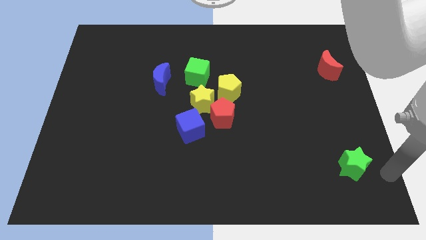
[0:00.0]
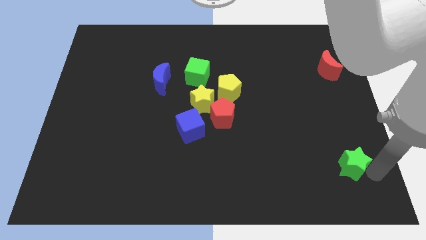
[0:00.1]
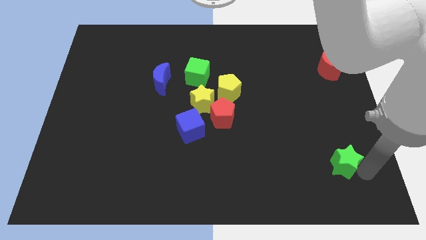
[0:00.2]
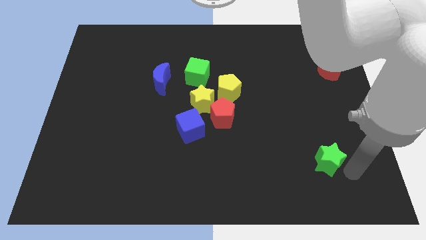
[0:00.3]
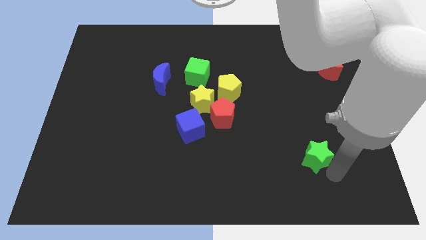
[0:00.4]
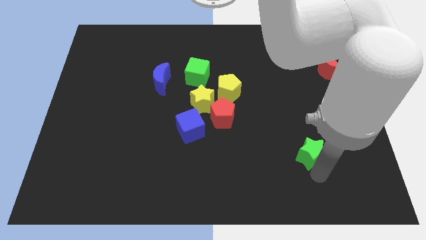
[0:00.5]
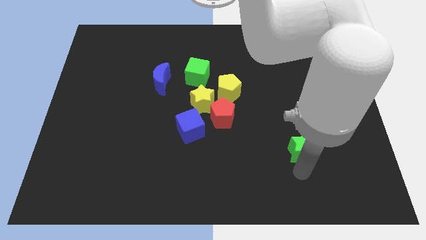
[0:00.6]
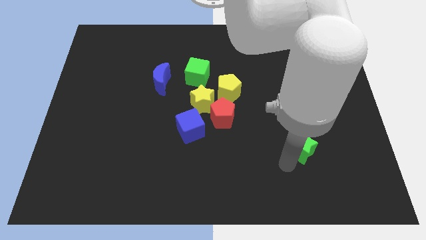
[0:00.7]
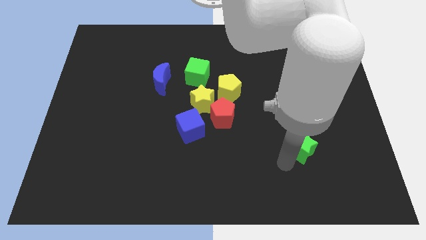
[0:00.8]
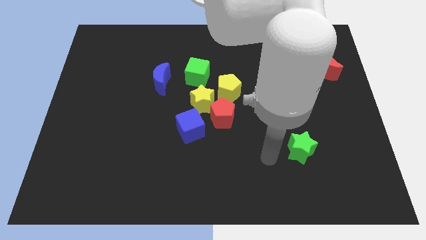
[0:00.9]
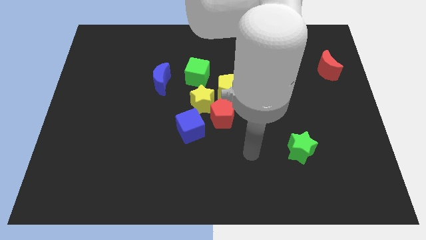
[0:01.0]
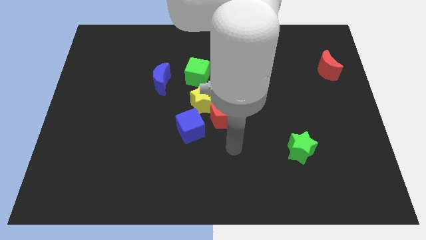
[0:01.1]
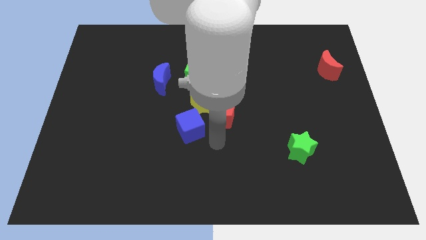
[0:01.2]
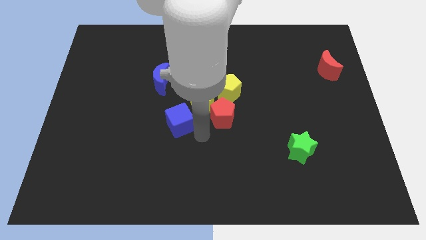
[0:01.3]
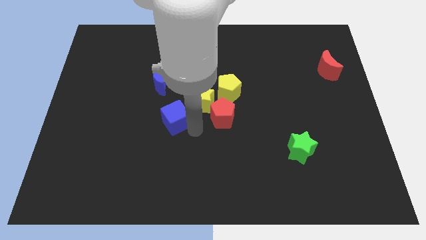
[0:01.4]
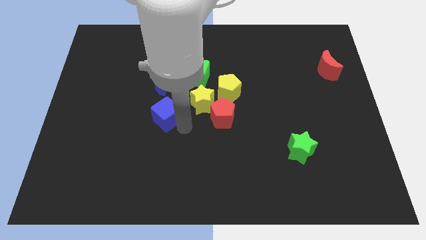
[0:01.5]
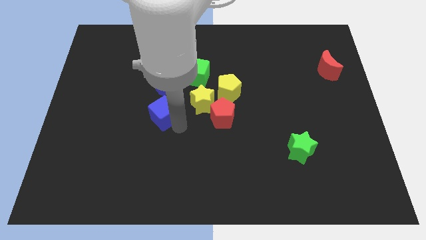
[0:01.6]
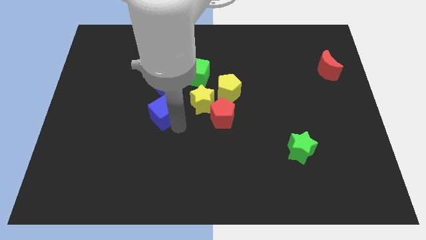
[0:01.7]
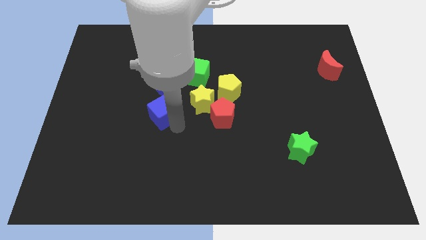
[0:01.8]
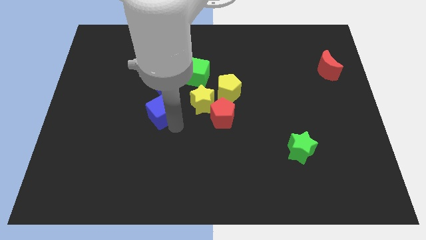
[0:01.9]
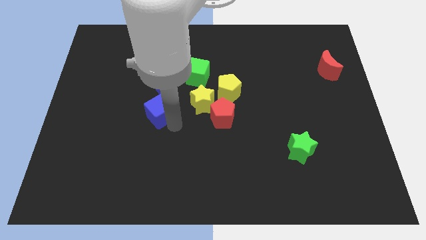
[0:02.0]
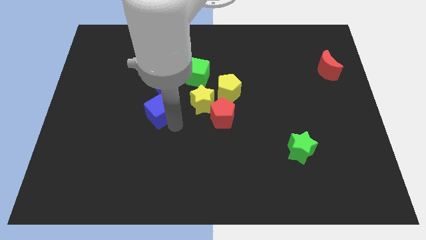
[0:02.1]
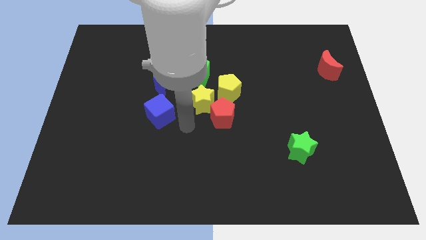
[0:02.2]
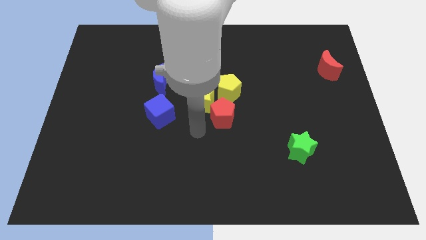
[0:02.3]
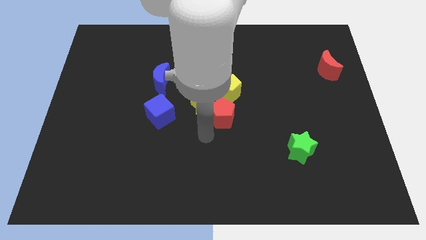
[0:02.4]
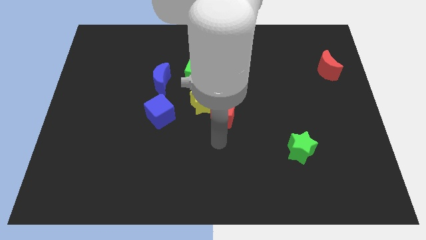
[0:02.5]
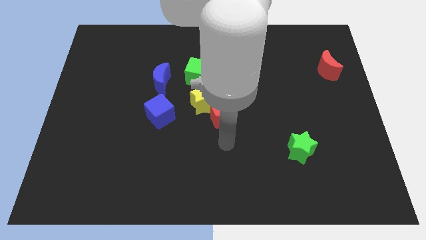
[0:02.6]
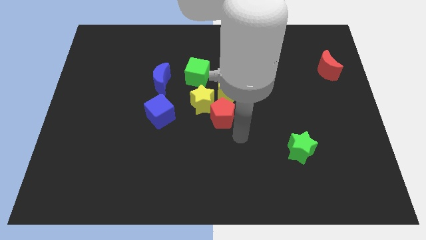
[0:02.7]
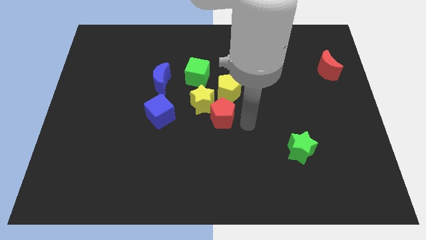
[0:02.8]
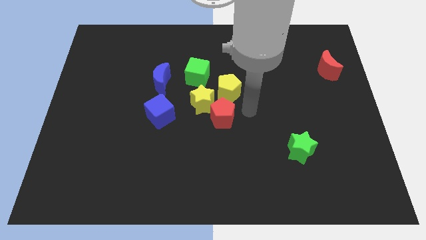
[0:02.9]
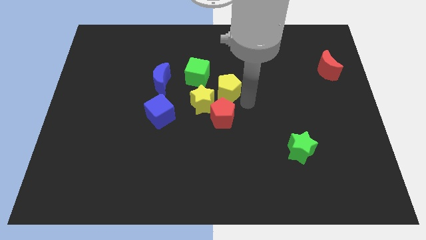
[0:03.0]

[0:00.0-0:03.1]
put blue cube at the bottom of blue moon

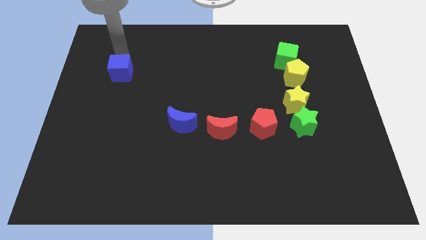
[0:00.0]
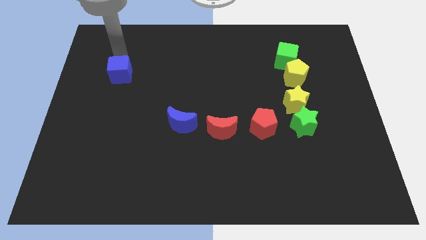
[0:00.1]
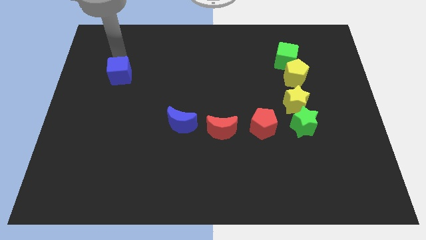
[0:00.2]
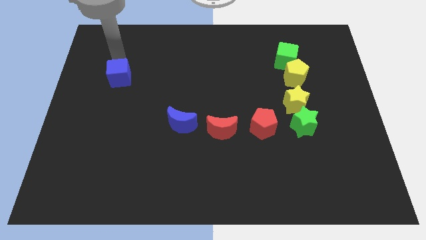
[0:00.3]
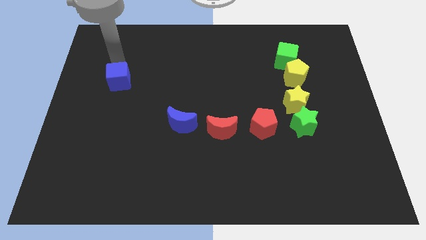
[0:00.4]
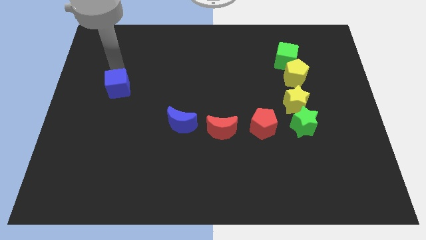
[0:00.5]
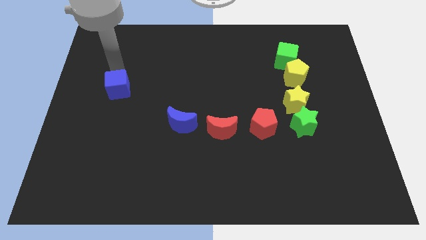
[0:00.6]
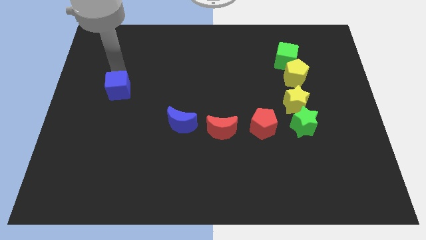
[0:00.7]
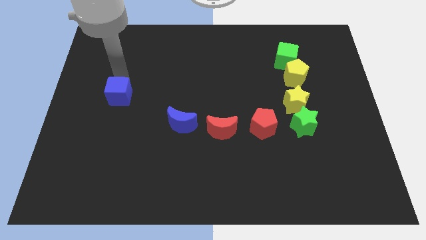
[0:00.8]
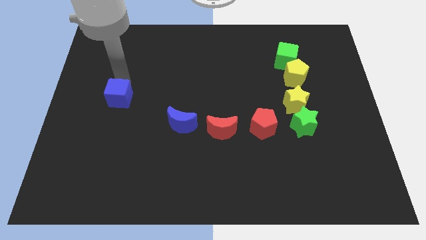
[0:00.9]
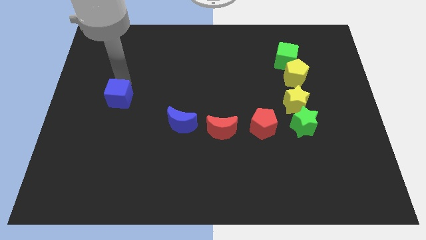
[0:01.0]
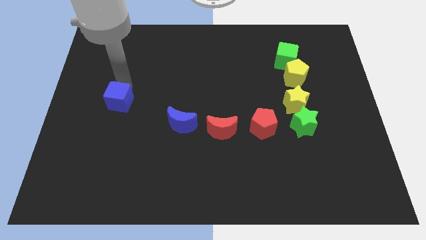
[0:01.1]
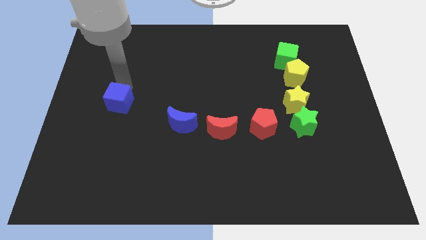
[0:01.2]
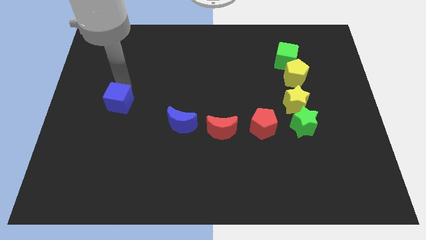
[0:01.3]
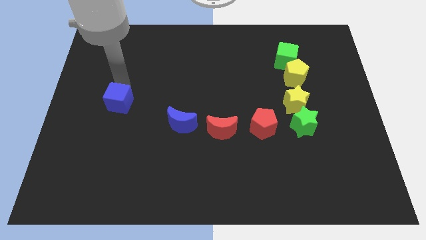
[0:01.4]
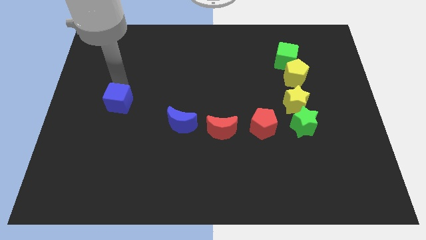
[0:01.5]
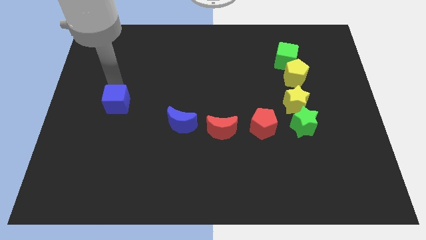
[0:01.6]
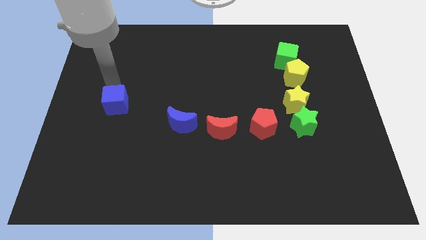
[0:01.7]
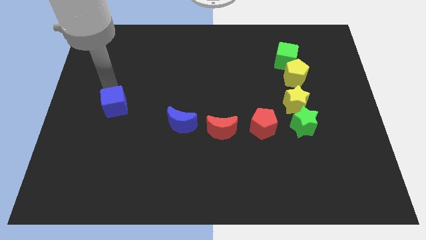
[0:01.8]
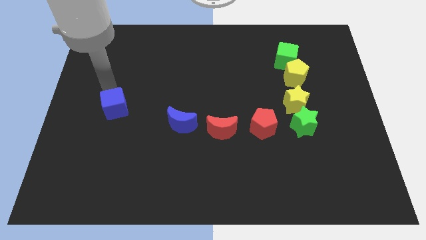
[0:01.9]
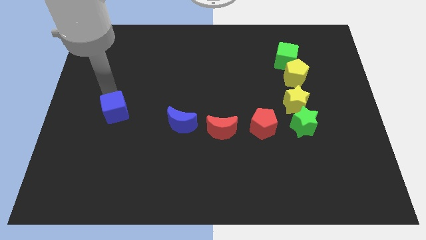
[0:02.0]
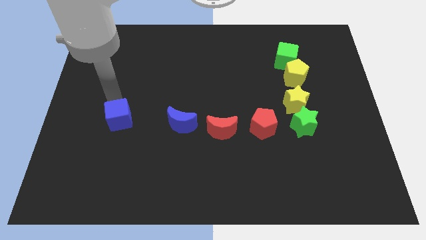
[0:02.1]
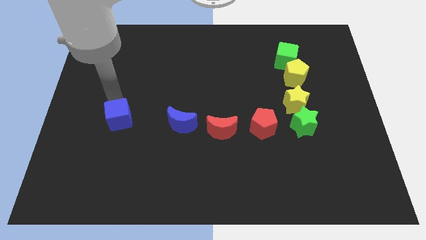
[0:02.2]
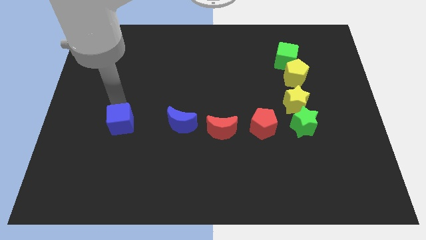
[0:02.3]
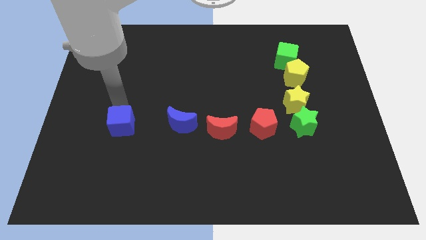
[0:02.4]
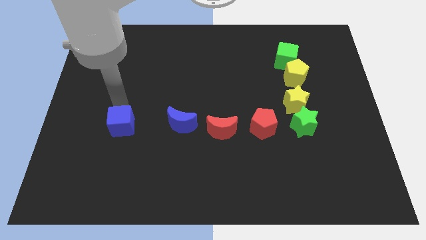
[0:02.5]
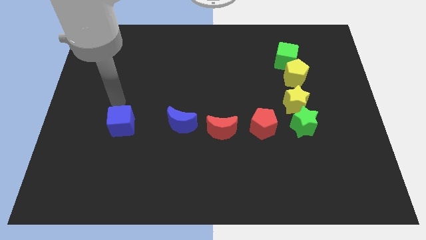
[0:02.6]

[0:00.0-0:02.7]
move the blue cube towards the bottom of the board

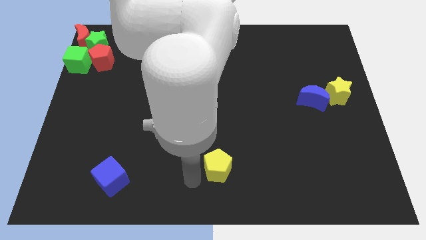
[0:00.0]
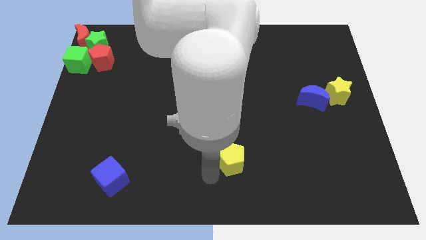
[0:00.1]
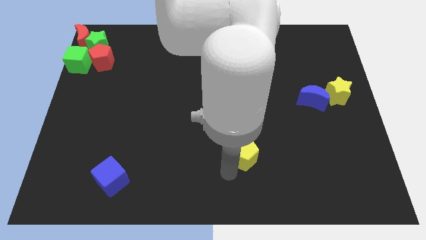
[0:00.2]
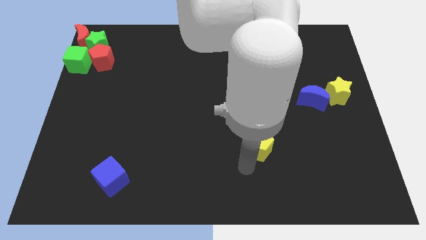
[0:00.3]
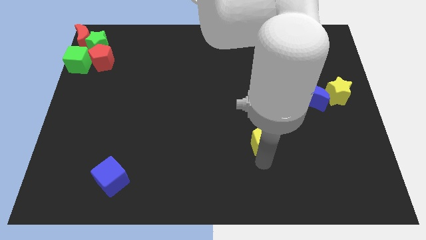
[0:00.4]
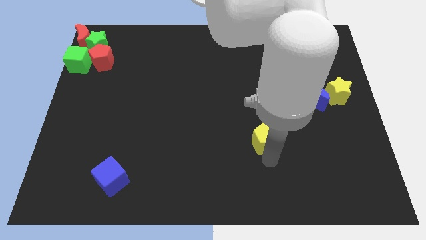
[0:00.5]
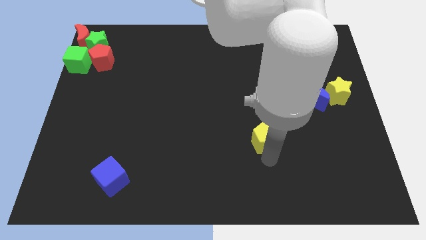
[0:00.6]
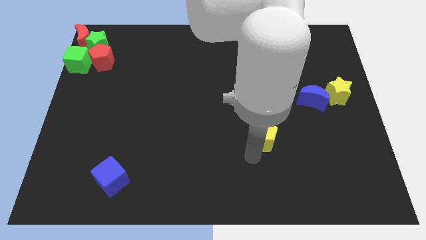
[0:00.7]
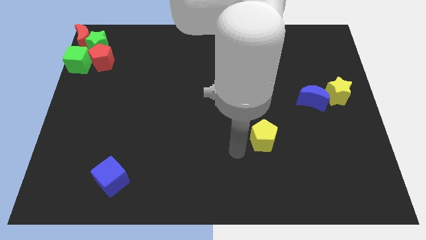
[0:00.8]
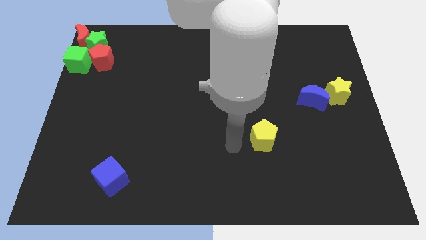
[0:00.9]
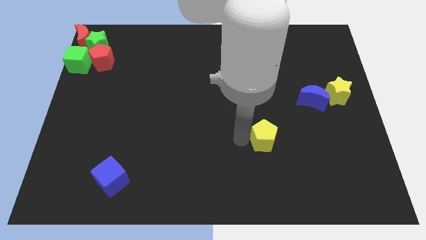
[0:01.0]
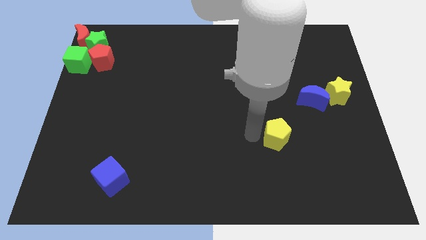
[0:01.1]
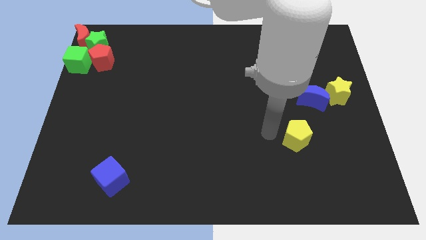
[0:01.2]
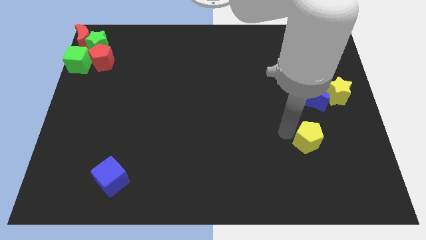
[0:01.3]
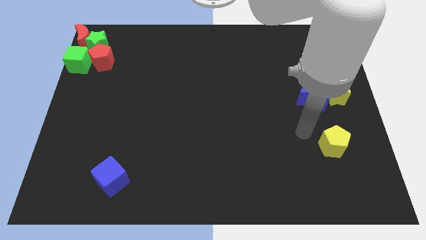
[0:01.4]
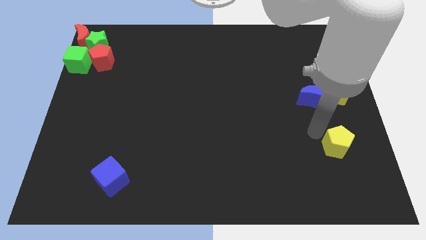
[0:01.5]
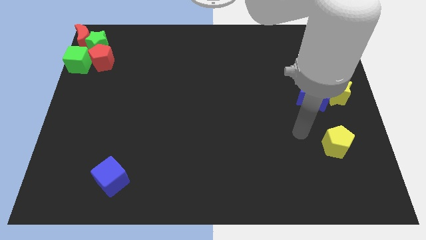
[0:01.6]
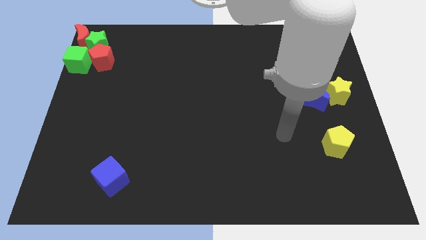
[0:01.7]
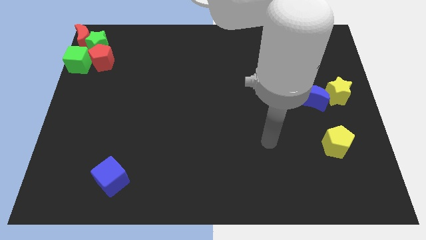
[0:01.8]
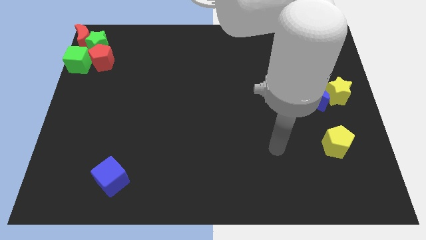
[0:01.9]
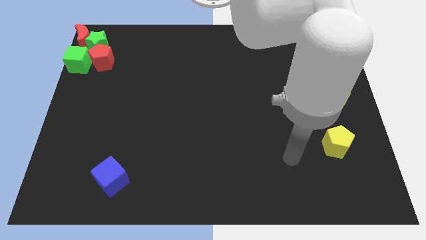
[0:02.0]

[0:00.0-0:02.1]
move the yellow pentagon towards the right center of the board

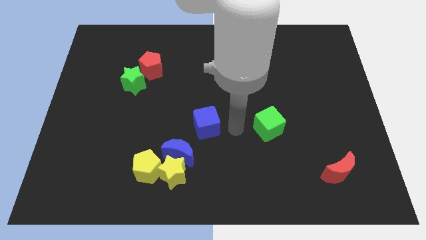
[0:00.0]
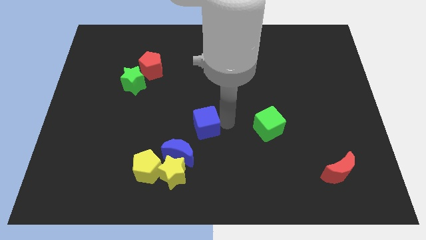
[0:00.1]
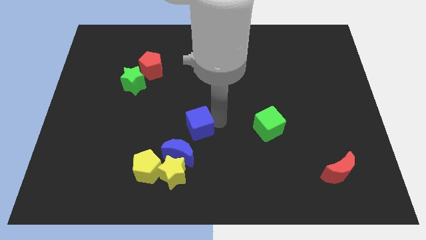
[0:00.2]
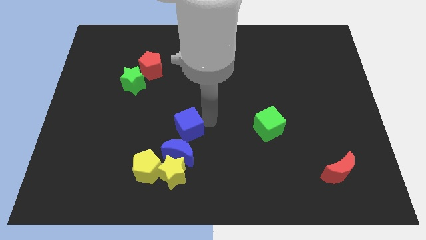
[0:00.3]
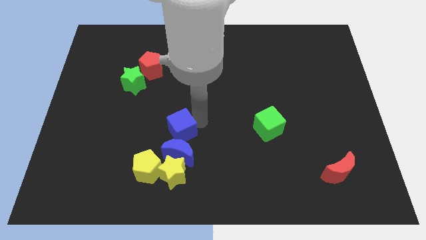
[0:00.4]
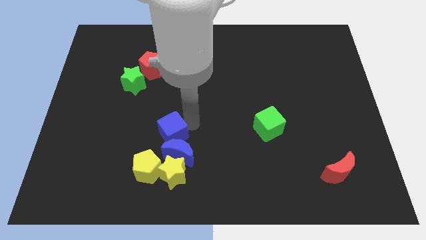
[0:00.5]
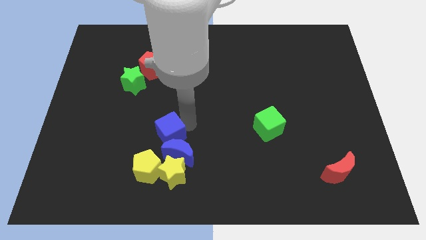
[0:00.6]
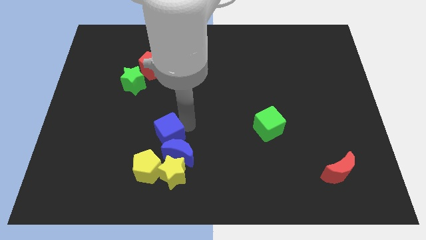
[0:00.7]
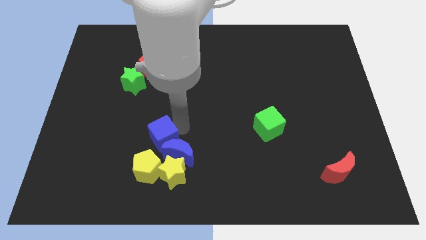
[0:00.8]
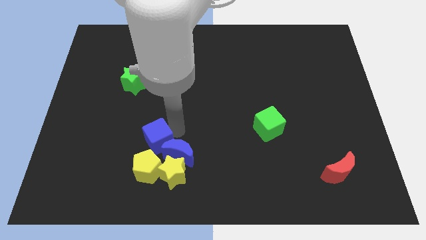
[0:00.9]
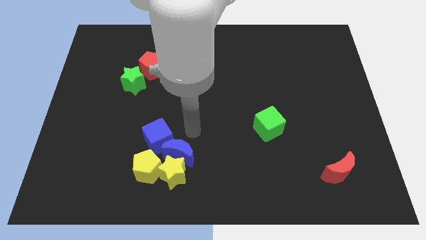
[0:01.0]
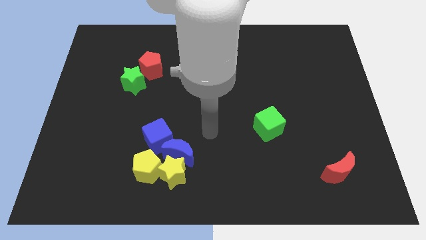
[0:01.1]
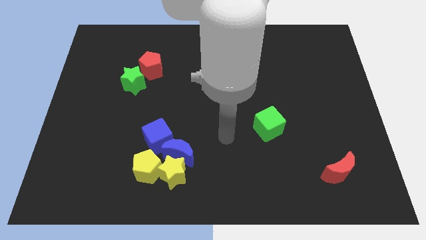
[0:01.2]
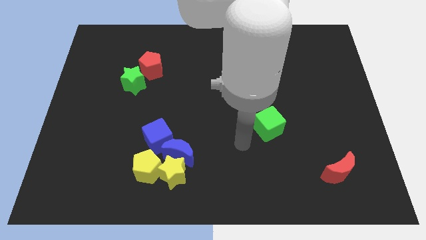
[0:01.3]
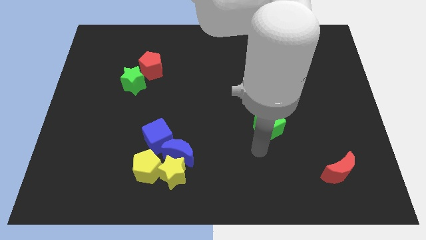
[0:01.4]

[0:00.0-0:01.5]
move the blue cube close to the yellow pentagon
